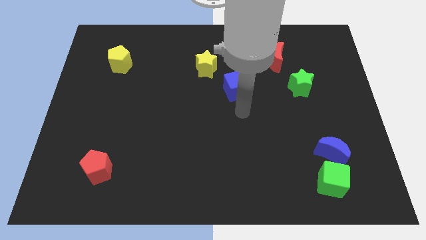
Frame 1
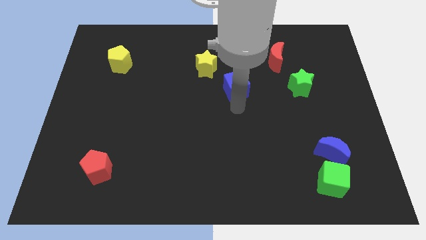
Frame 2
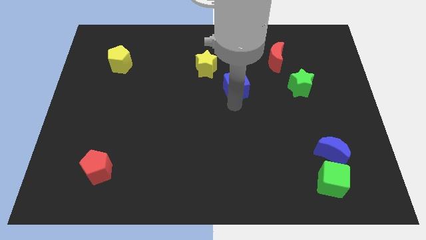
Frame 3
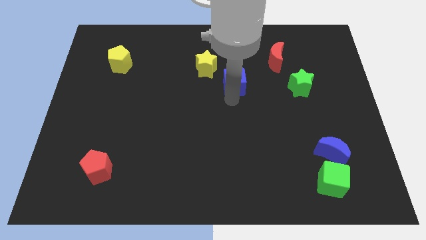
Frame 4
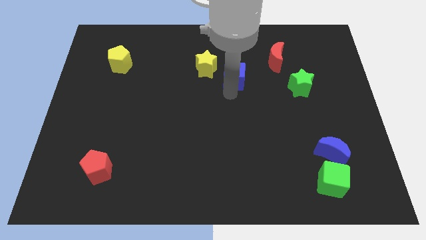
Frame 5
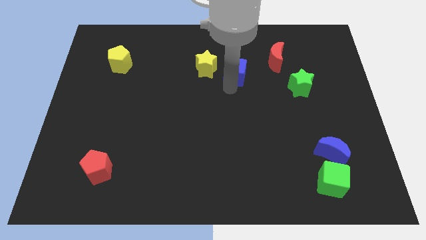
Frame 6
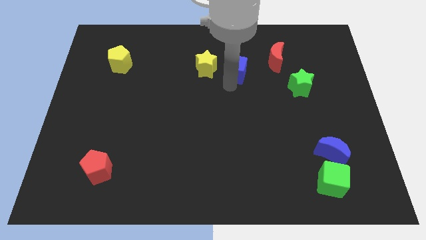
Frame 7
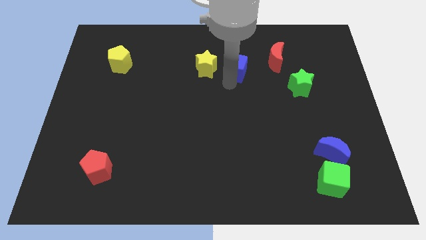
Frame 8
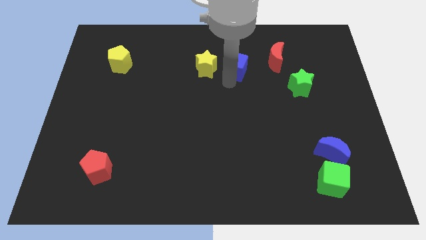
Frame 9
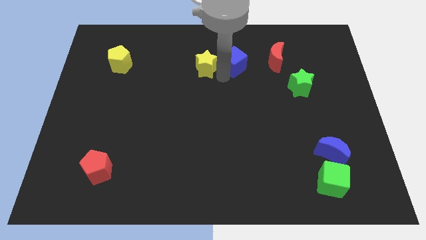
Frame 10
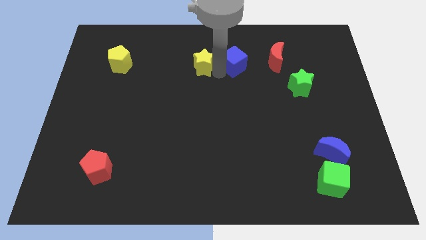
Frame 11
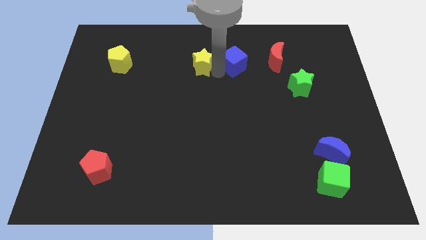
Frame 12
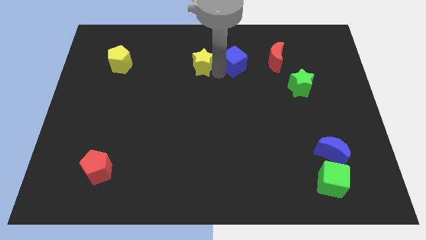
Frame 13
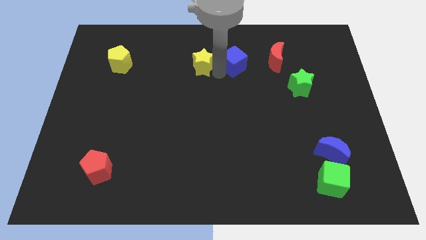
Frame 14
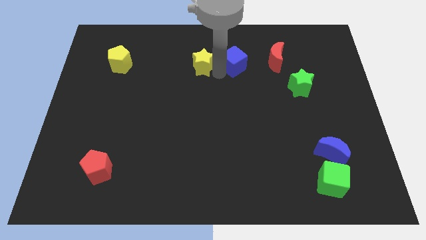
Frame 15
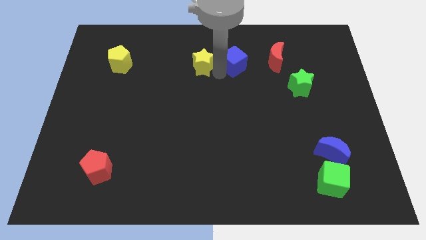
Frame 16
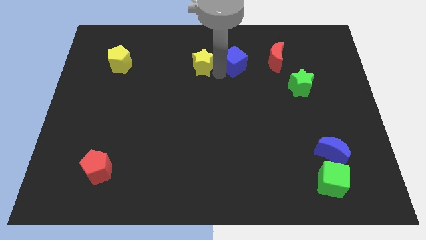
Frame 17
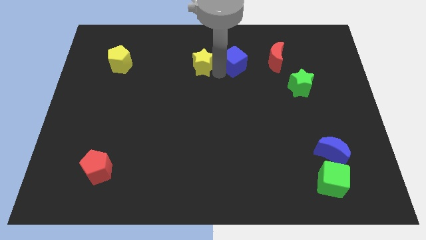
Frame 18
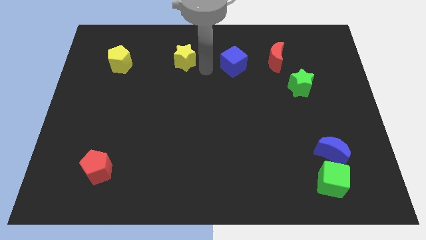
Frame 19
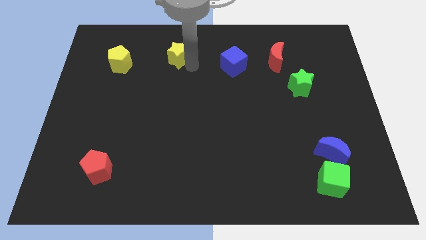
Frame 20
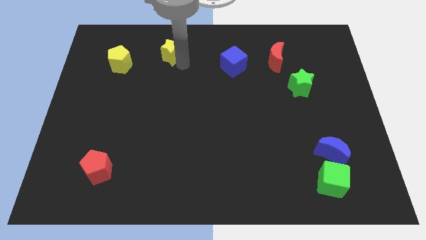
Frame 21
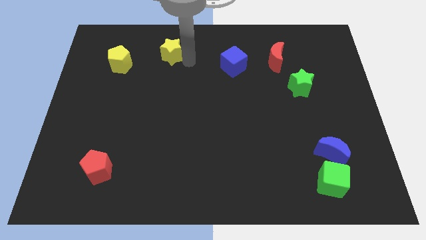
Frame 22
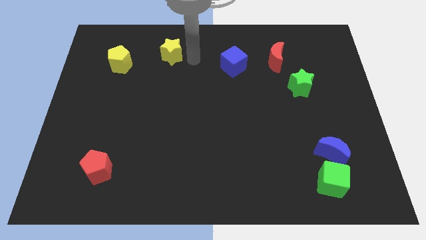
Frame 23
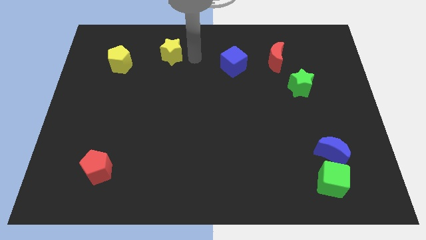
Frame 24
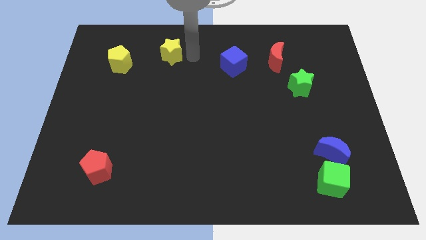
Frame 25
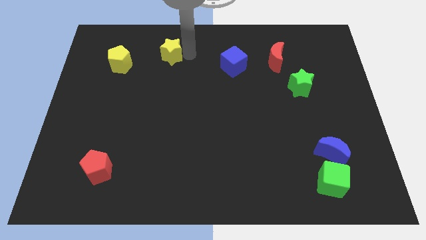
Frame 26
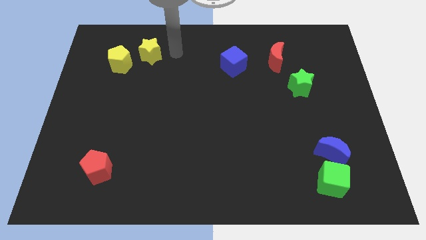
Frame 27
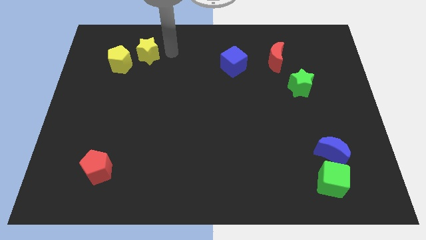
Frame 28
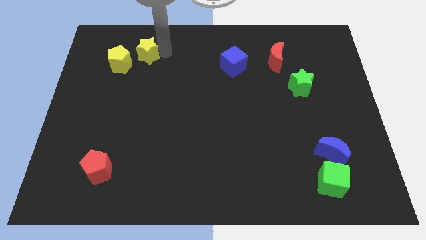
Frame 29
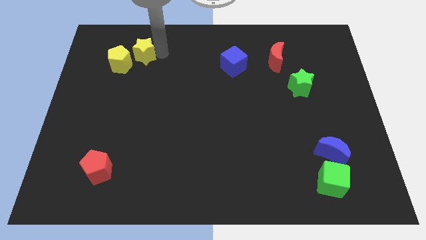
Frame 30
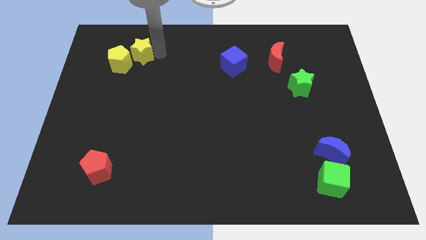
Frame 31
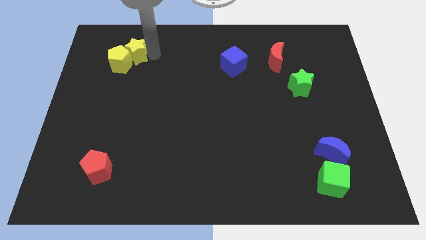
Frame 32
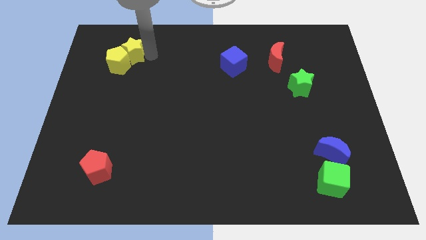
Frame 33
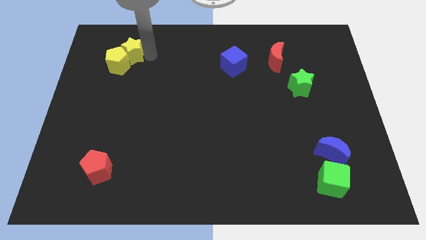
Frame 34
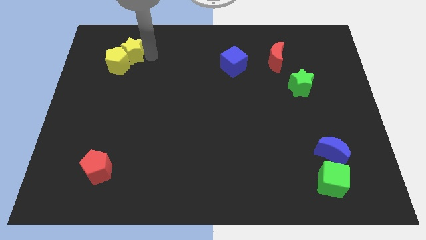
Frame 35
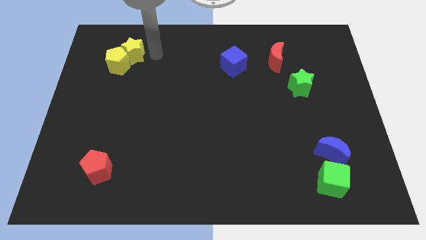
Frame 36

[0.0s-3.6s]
move the yellow star towards the yellow pentagon

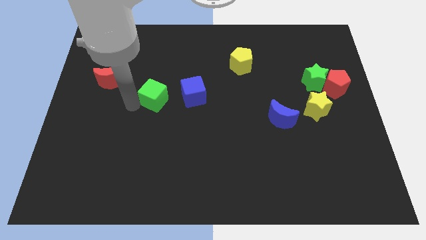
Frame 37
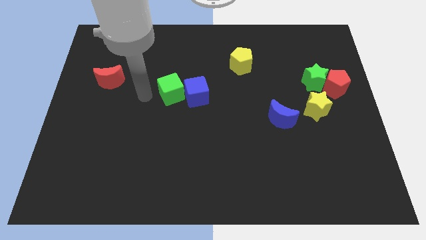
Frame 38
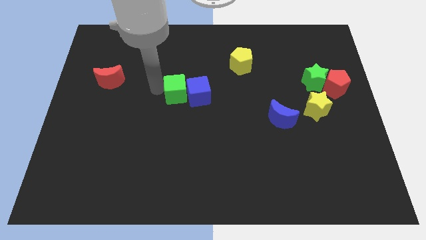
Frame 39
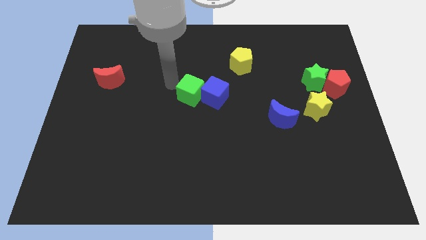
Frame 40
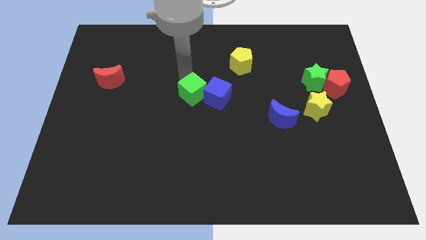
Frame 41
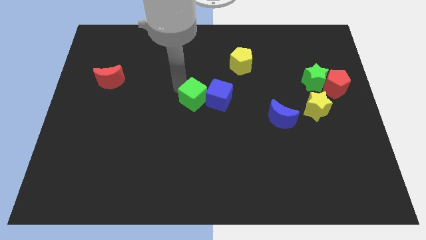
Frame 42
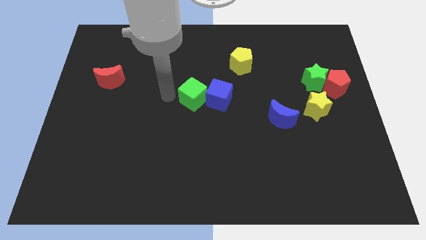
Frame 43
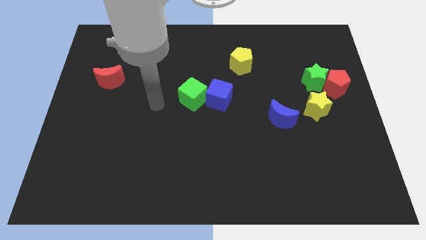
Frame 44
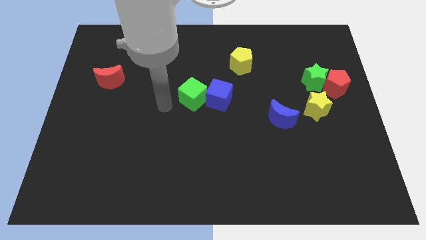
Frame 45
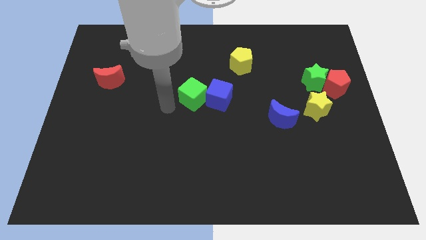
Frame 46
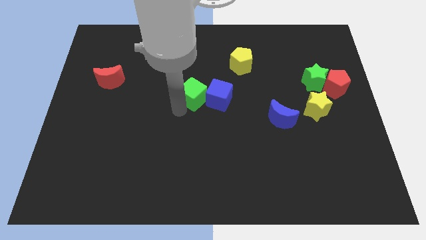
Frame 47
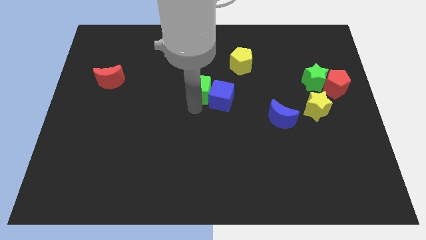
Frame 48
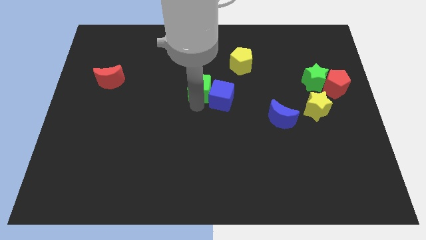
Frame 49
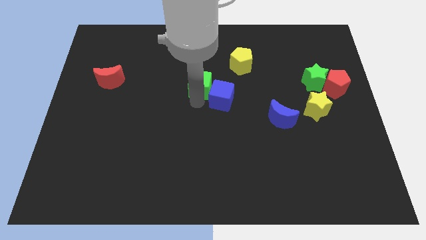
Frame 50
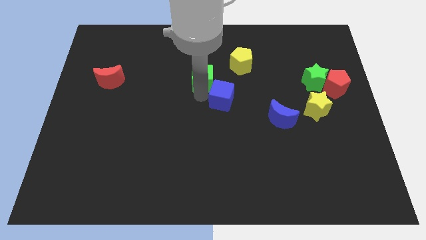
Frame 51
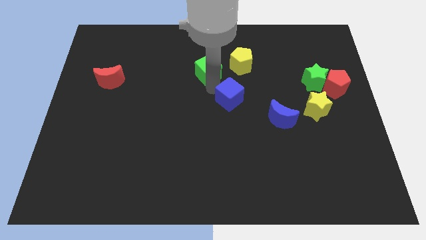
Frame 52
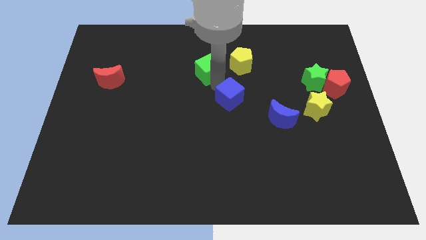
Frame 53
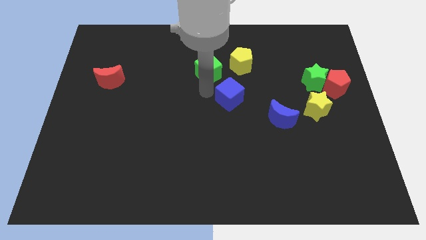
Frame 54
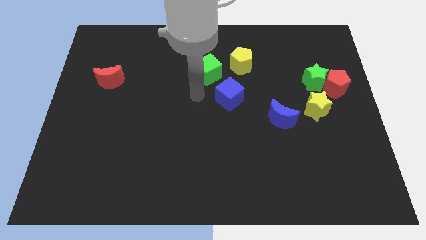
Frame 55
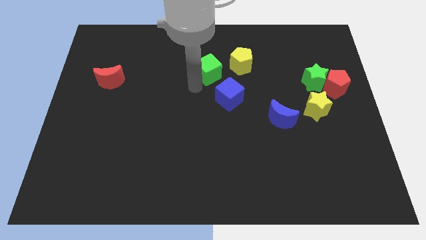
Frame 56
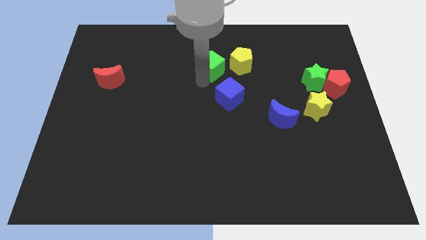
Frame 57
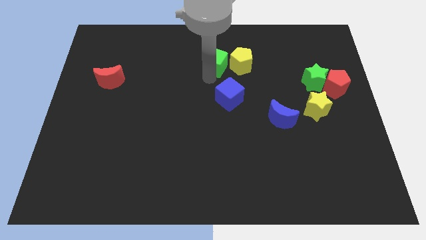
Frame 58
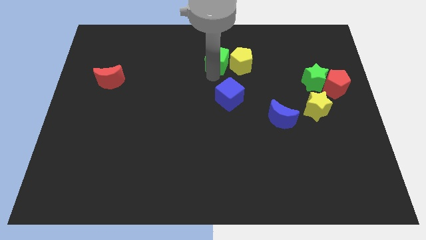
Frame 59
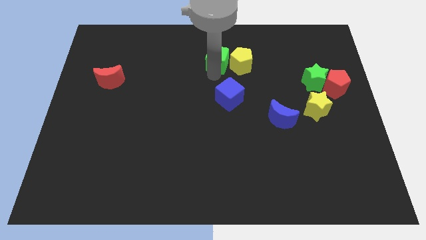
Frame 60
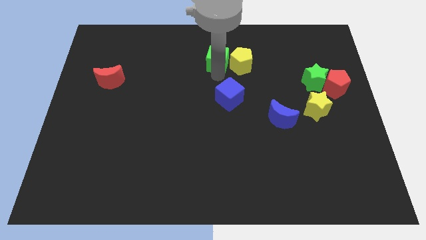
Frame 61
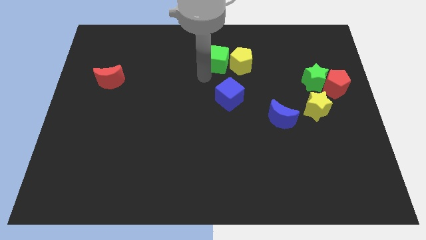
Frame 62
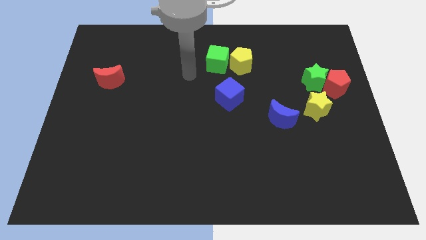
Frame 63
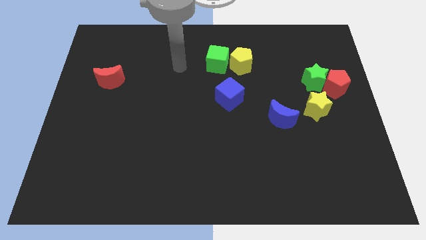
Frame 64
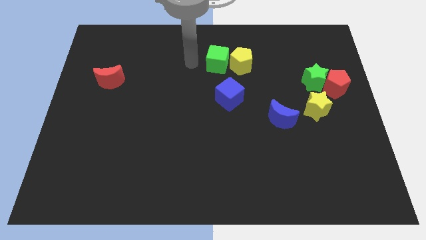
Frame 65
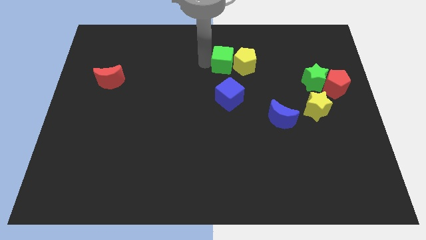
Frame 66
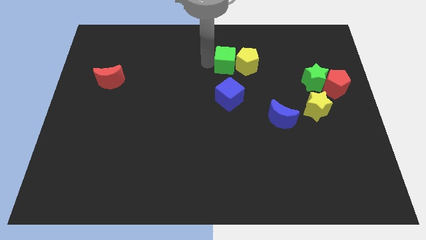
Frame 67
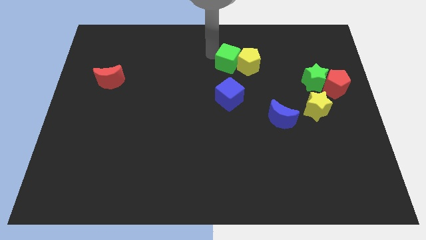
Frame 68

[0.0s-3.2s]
move the green cube left to the yellow pentagon

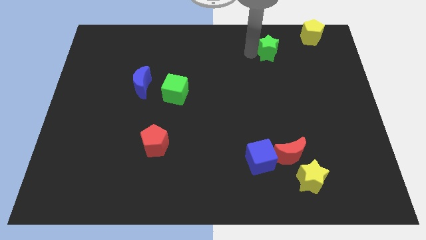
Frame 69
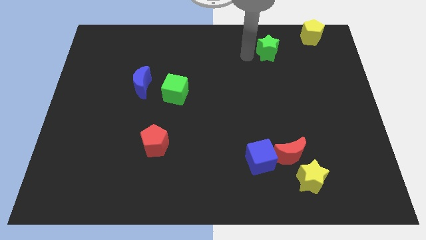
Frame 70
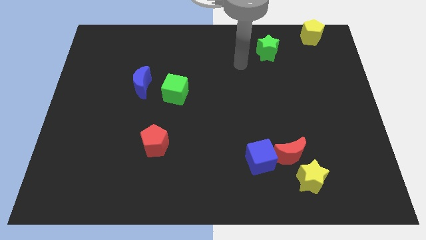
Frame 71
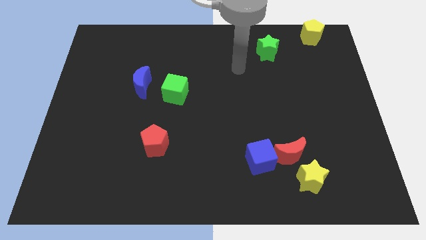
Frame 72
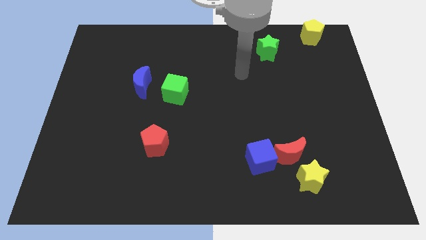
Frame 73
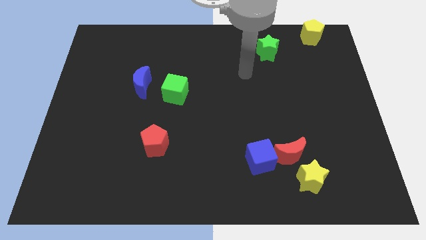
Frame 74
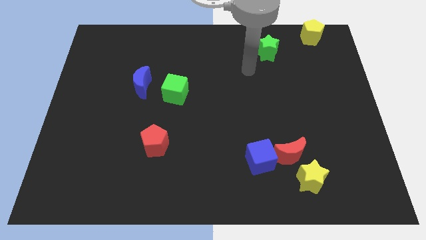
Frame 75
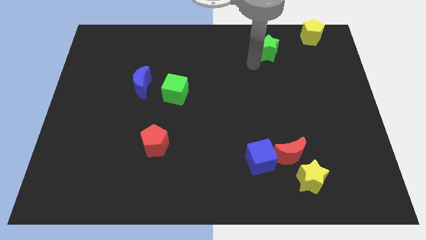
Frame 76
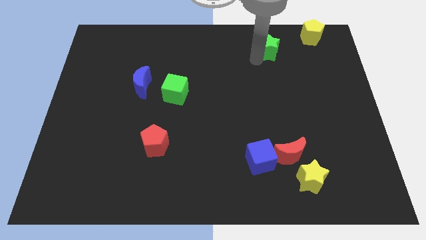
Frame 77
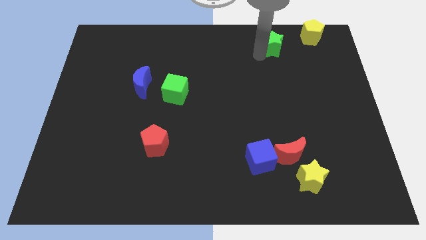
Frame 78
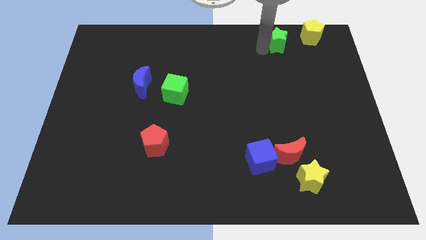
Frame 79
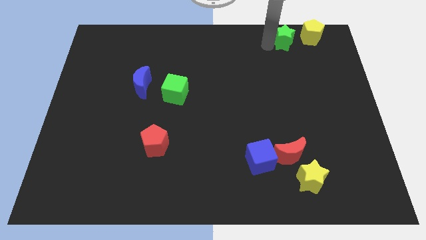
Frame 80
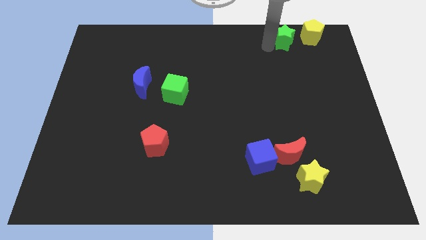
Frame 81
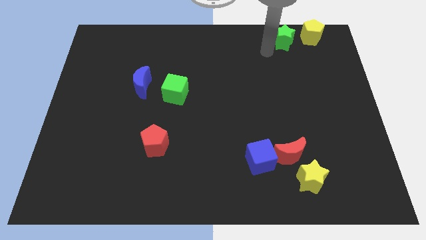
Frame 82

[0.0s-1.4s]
place green star to the left of yellow pentagon

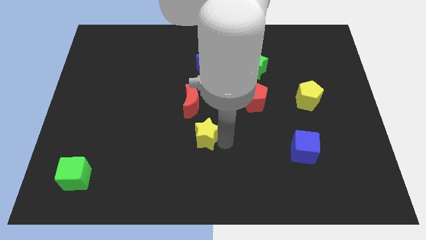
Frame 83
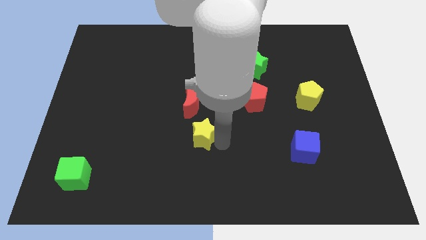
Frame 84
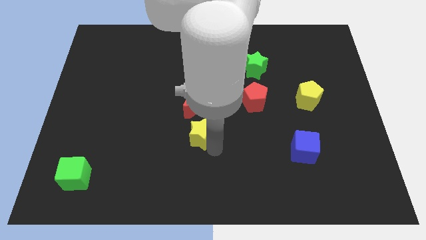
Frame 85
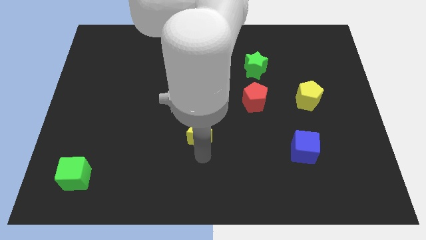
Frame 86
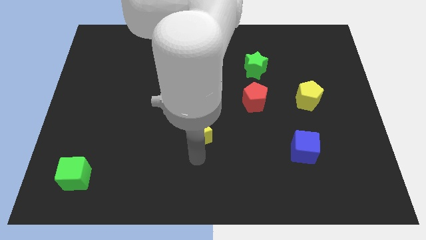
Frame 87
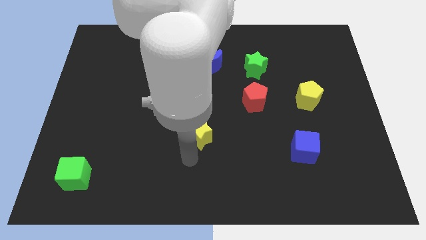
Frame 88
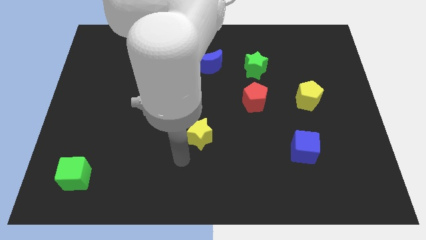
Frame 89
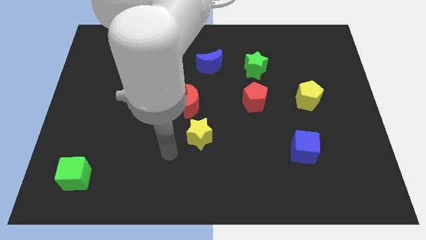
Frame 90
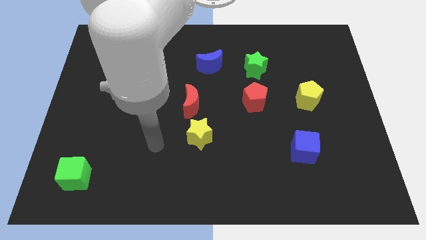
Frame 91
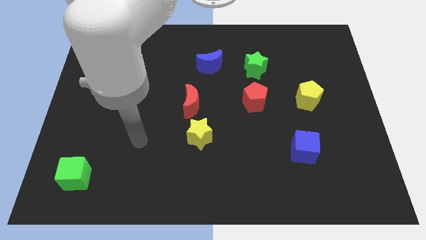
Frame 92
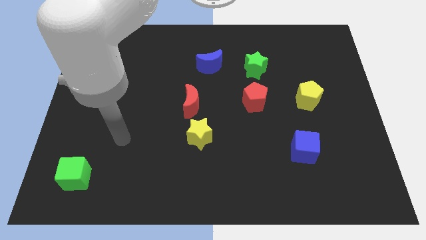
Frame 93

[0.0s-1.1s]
place the yellow star below the red moon
